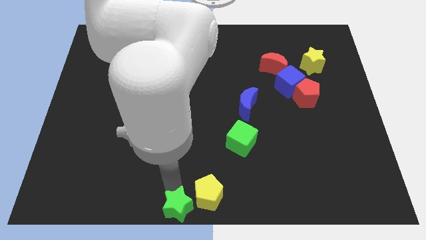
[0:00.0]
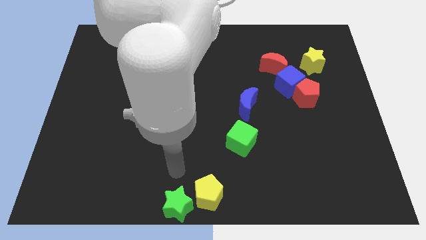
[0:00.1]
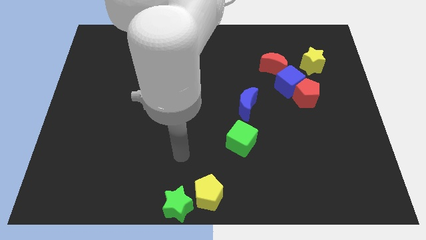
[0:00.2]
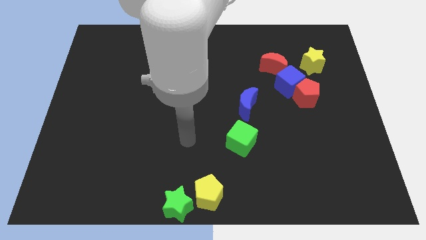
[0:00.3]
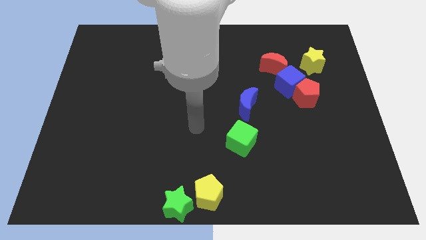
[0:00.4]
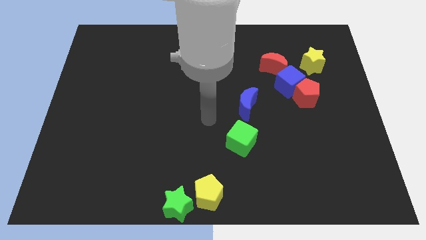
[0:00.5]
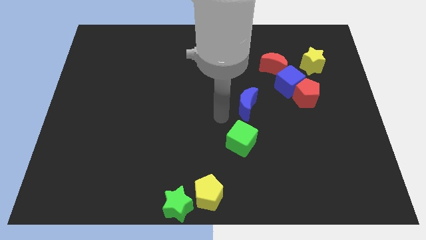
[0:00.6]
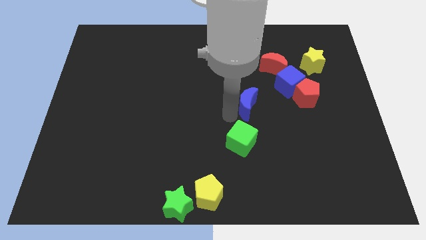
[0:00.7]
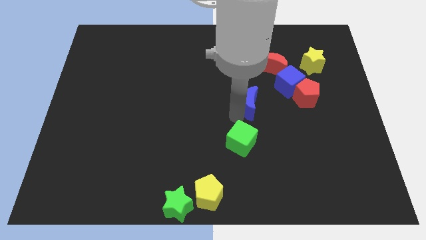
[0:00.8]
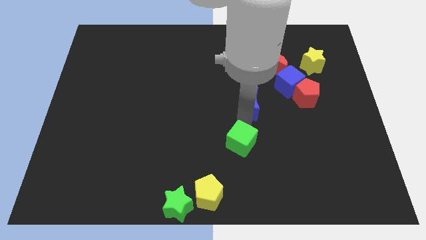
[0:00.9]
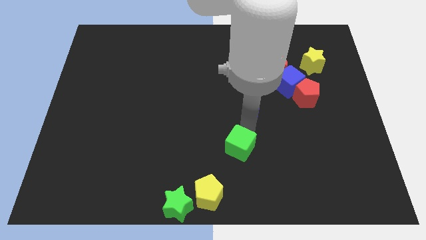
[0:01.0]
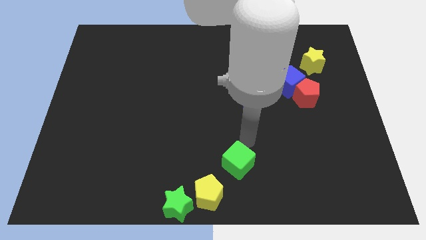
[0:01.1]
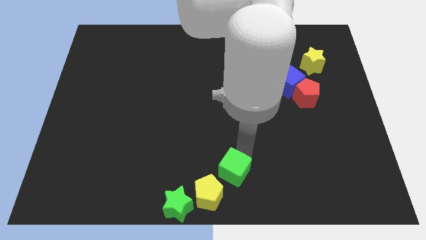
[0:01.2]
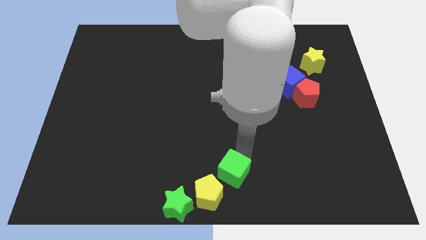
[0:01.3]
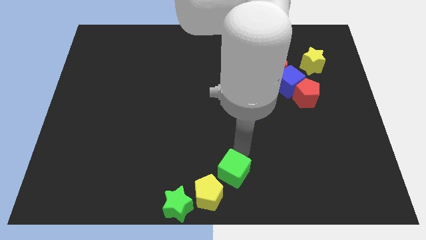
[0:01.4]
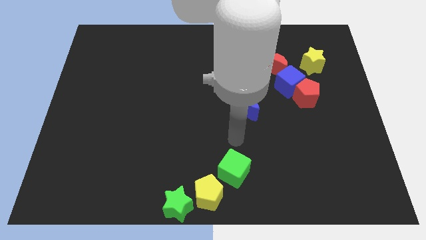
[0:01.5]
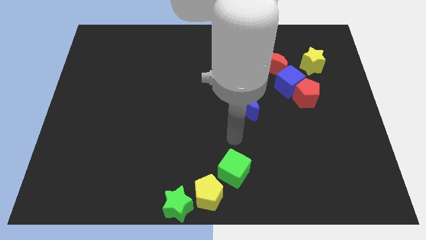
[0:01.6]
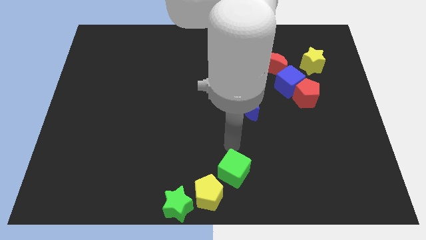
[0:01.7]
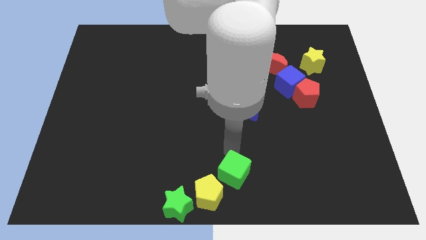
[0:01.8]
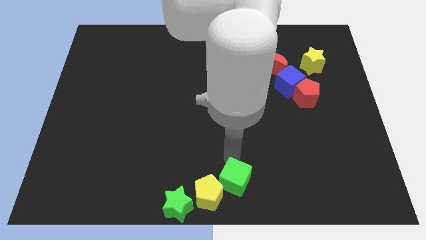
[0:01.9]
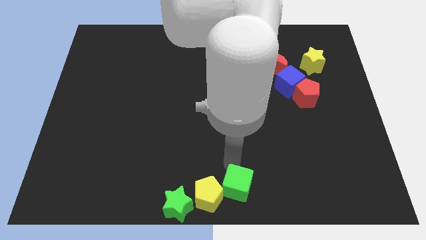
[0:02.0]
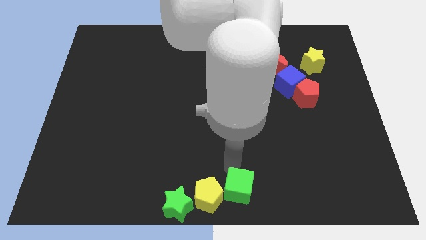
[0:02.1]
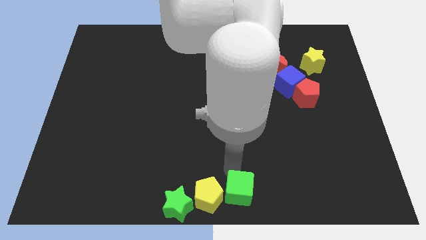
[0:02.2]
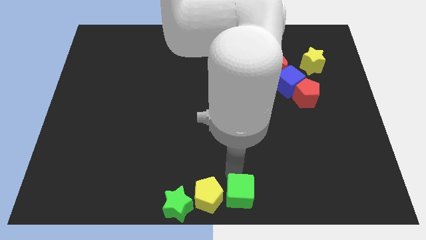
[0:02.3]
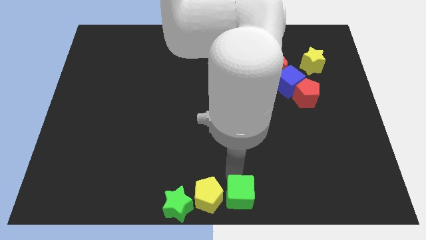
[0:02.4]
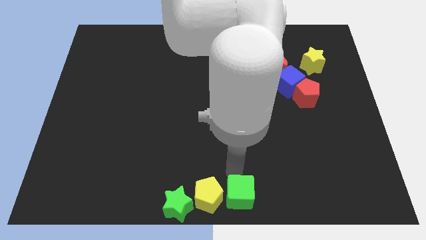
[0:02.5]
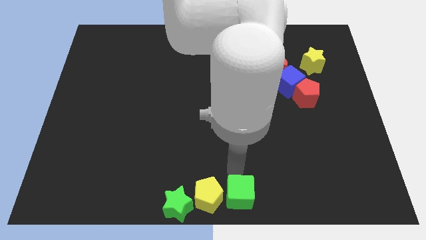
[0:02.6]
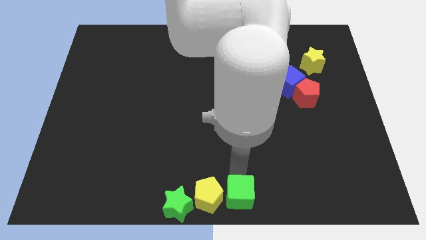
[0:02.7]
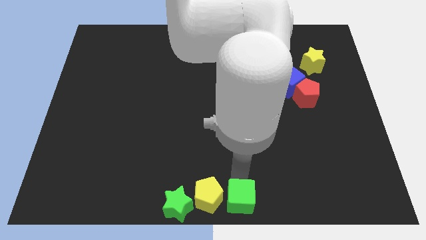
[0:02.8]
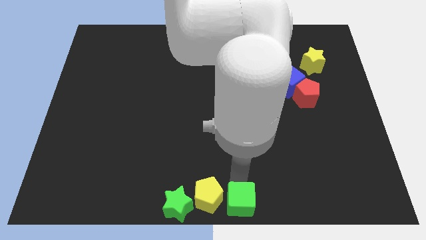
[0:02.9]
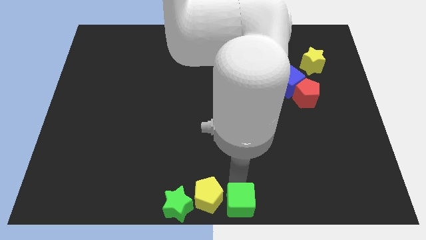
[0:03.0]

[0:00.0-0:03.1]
slide the green cube to the bottom center

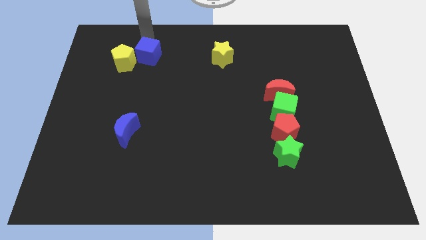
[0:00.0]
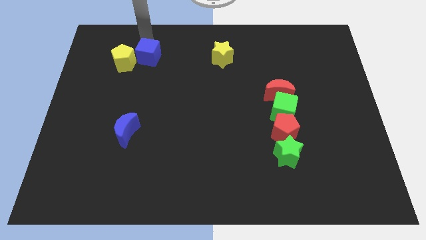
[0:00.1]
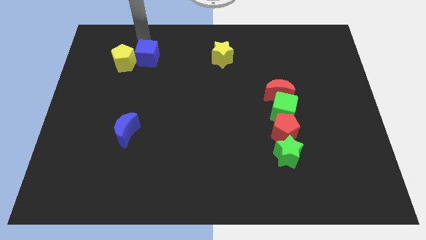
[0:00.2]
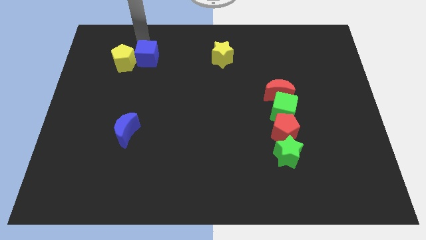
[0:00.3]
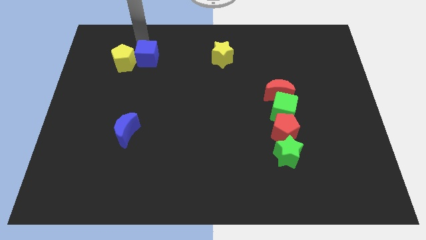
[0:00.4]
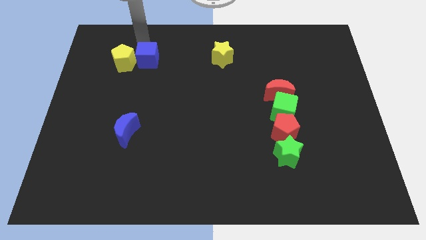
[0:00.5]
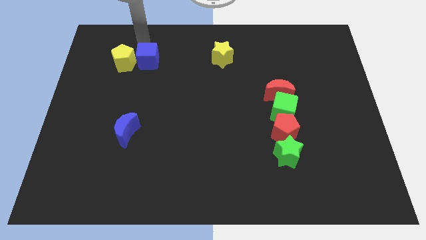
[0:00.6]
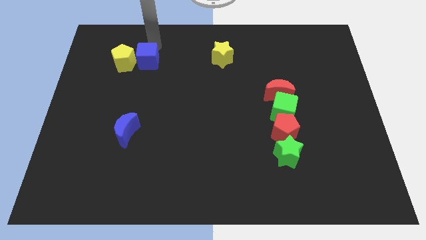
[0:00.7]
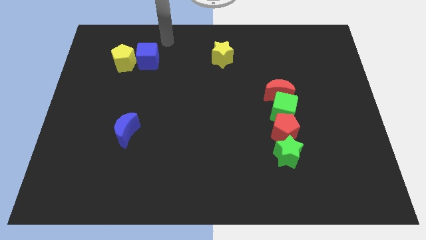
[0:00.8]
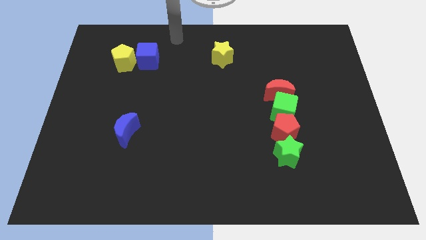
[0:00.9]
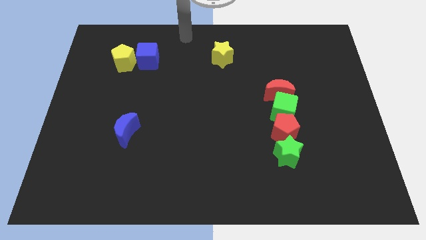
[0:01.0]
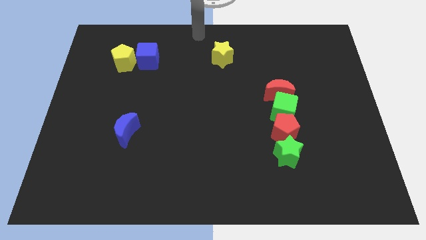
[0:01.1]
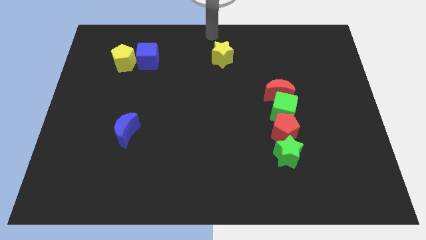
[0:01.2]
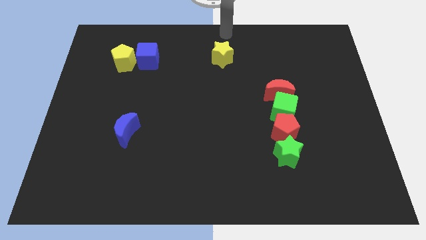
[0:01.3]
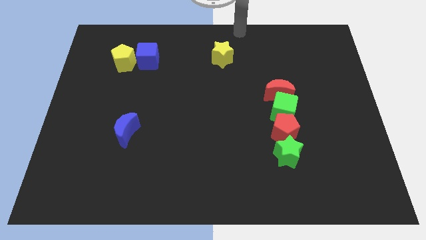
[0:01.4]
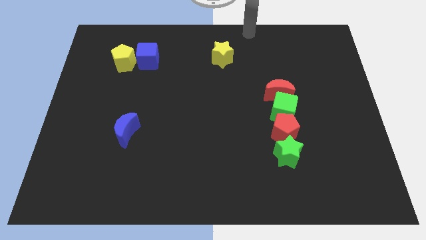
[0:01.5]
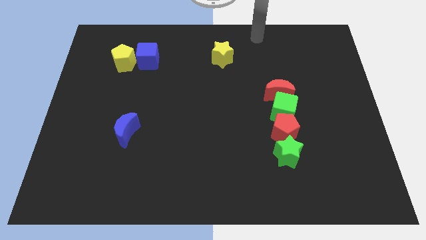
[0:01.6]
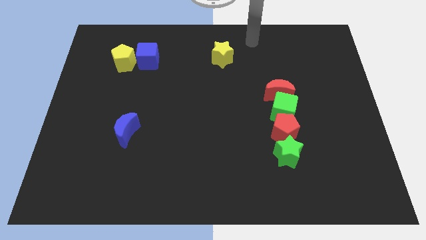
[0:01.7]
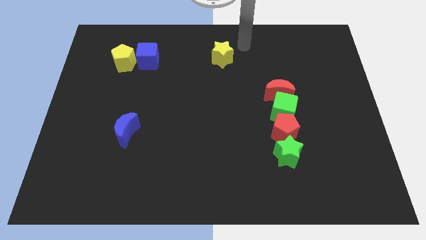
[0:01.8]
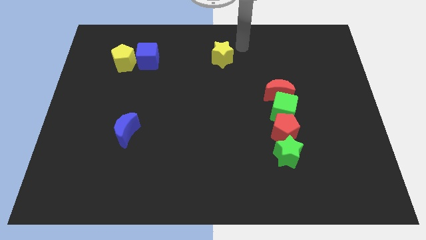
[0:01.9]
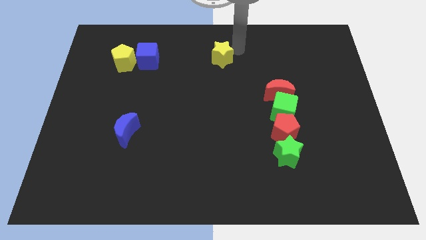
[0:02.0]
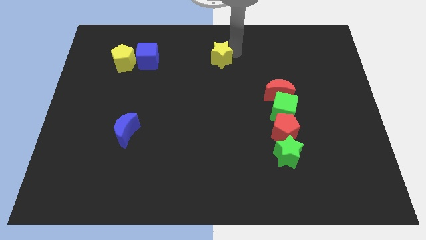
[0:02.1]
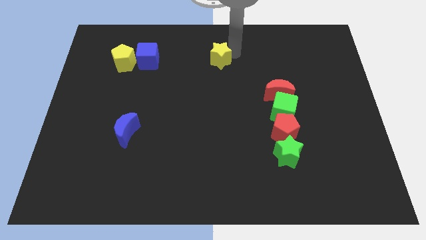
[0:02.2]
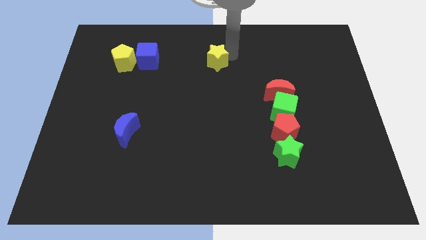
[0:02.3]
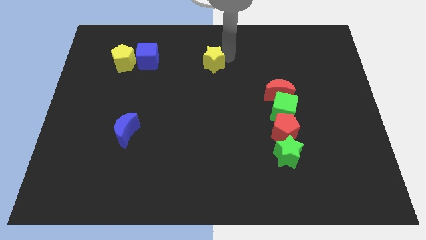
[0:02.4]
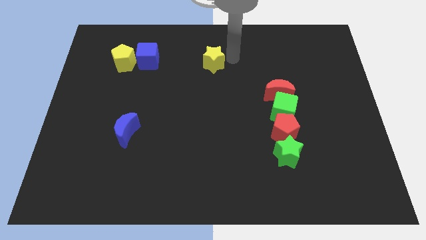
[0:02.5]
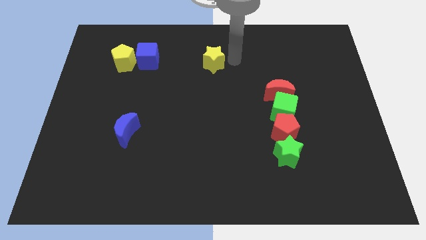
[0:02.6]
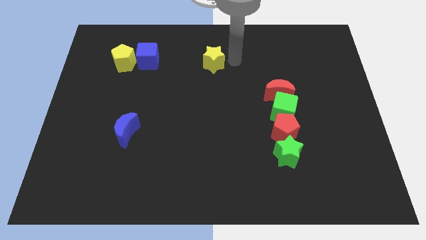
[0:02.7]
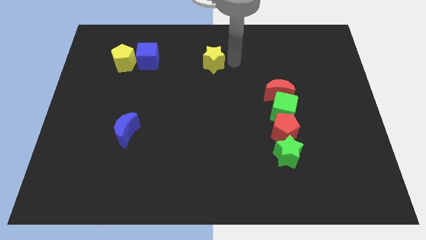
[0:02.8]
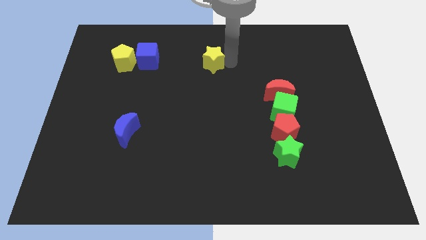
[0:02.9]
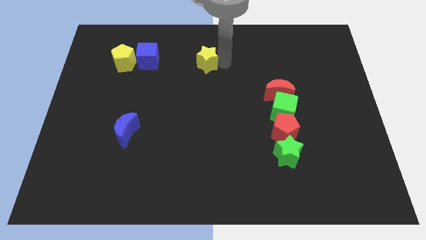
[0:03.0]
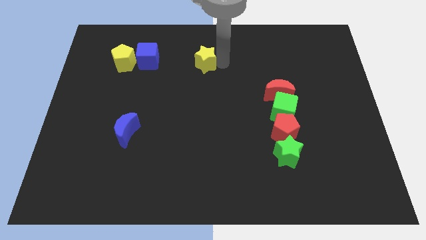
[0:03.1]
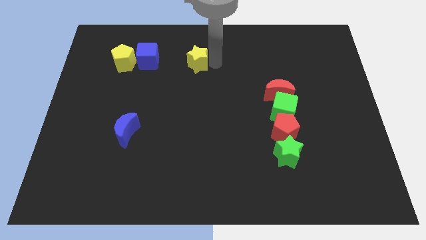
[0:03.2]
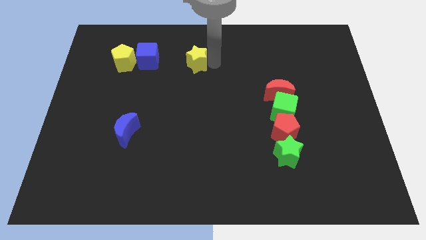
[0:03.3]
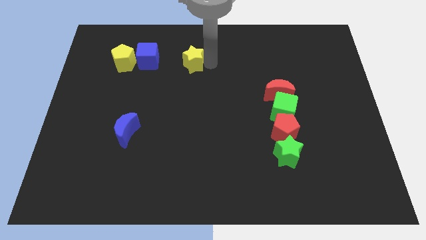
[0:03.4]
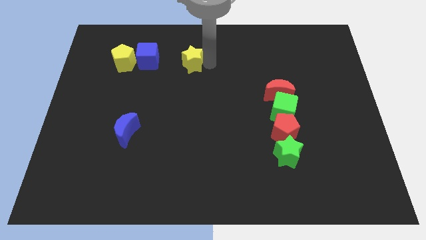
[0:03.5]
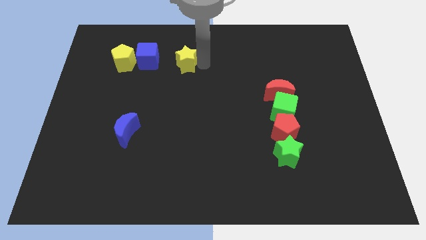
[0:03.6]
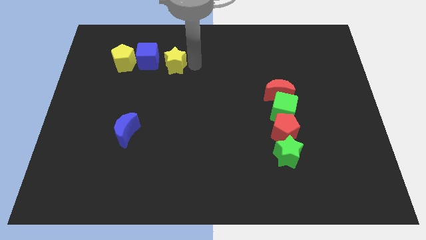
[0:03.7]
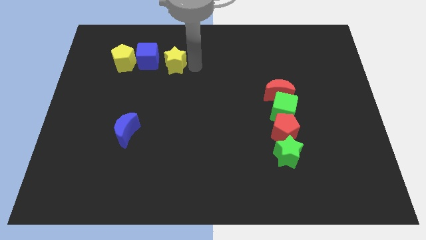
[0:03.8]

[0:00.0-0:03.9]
move yellow star towards blue cube

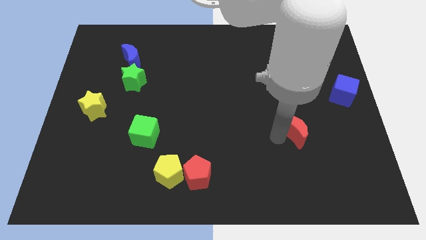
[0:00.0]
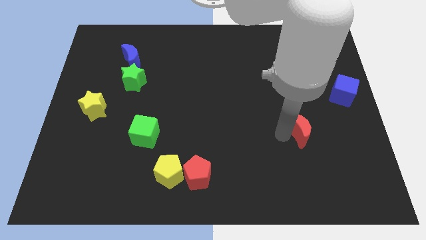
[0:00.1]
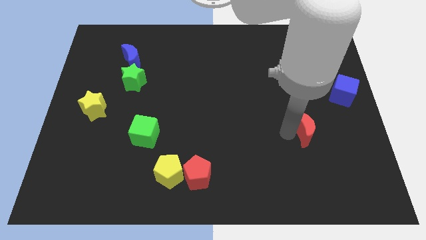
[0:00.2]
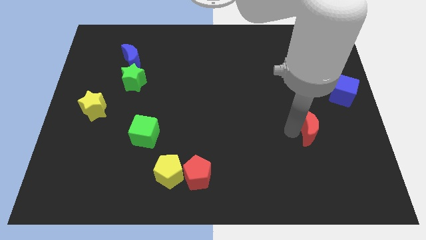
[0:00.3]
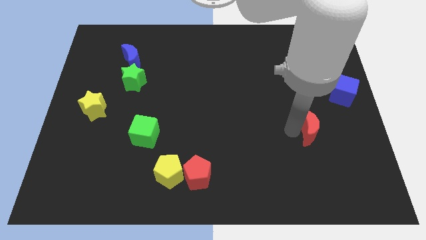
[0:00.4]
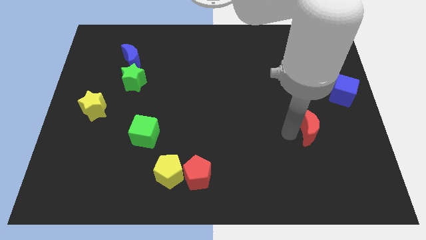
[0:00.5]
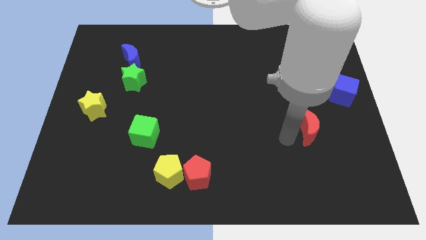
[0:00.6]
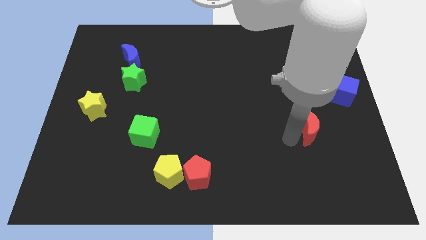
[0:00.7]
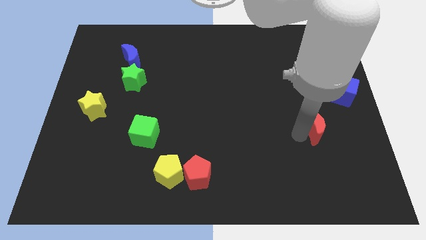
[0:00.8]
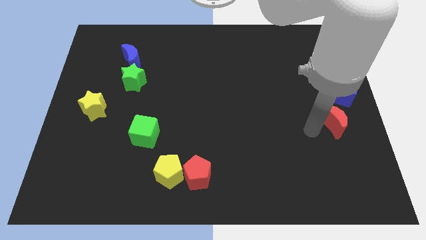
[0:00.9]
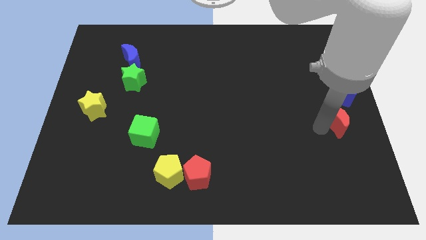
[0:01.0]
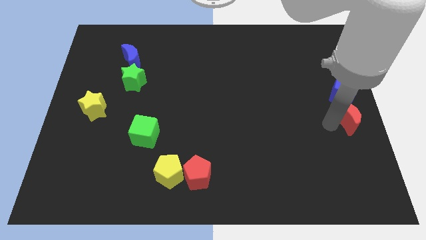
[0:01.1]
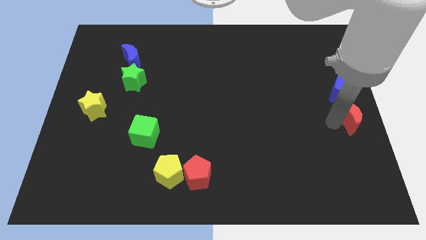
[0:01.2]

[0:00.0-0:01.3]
place the red crescent below the blue cube

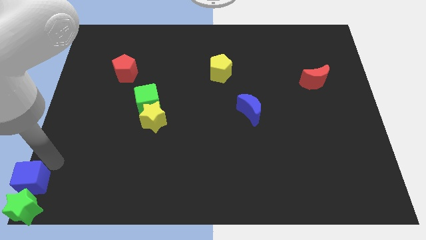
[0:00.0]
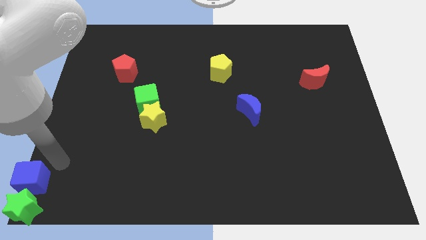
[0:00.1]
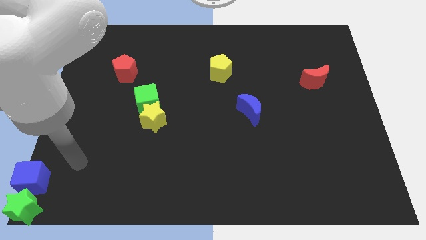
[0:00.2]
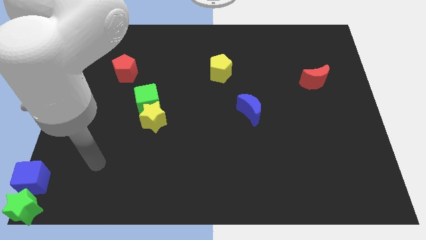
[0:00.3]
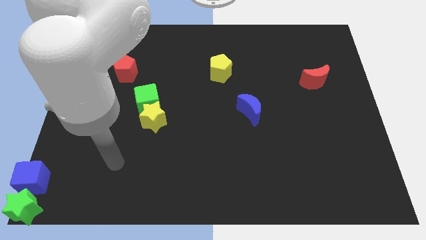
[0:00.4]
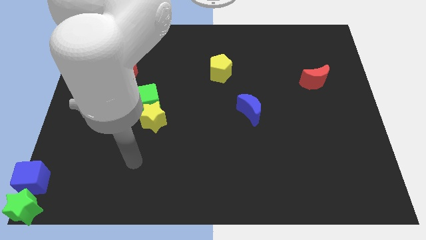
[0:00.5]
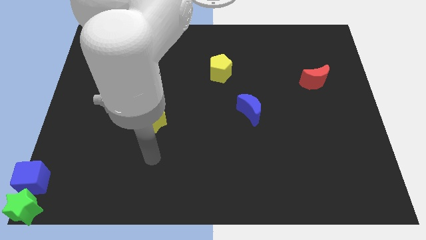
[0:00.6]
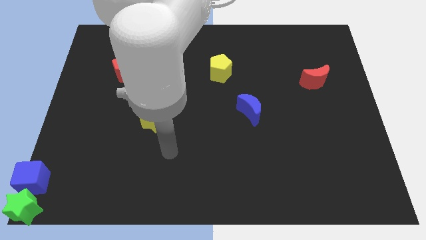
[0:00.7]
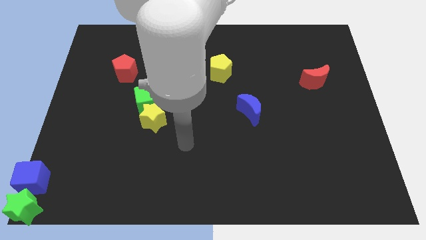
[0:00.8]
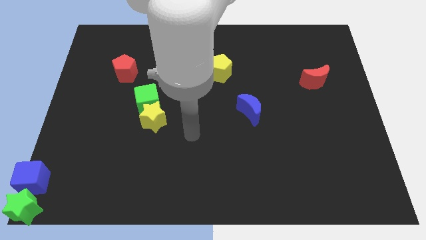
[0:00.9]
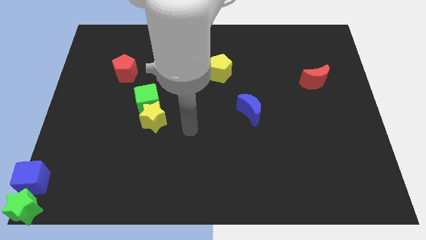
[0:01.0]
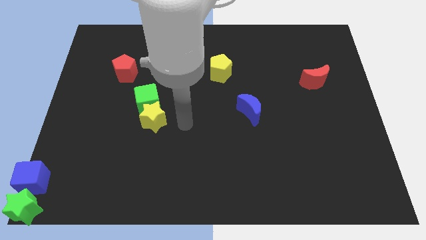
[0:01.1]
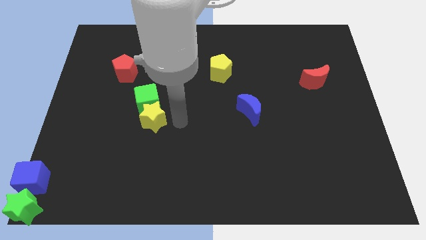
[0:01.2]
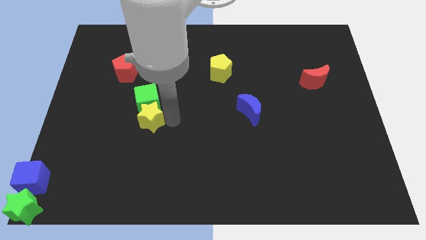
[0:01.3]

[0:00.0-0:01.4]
place your arm to the right of the yellow star
